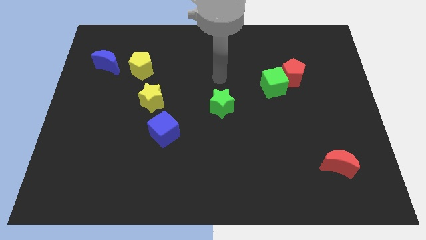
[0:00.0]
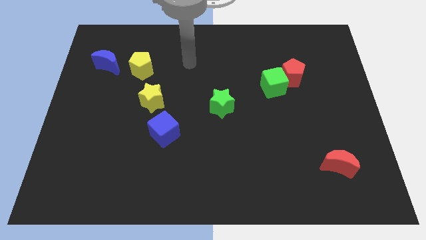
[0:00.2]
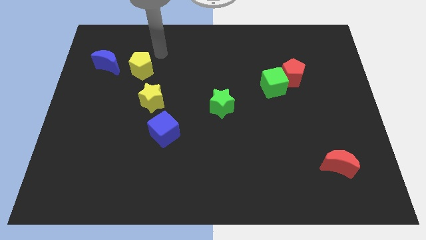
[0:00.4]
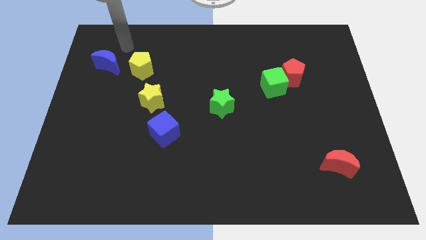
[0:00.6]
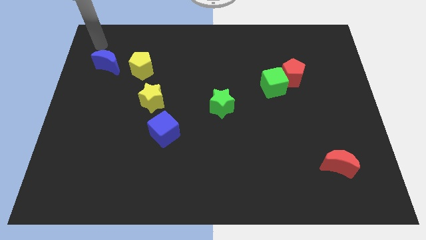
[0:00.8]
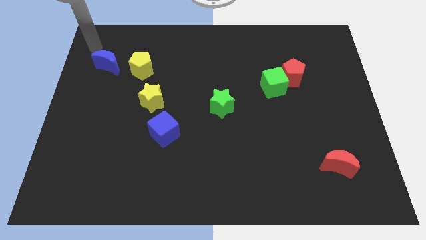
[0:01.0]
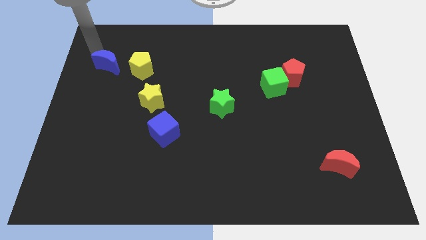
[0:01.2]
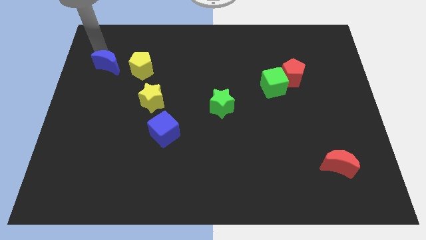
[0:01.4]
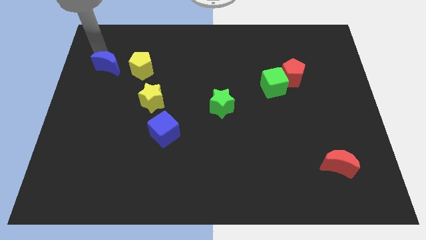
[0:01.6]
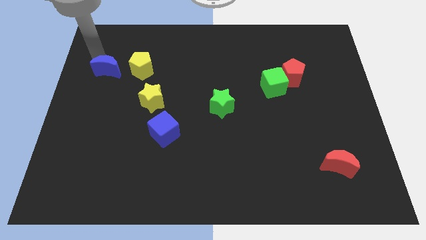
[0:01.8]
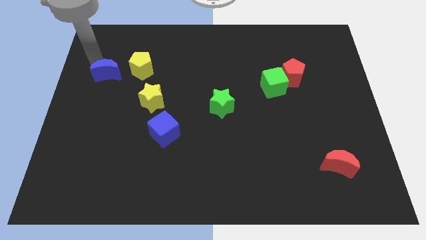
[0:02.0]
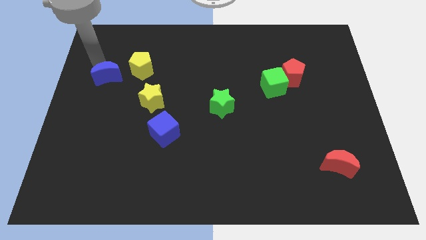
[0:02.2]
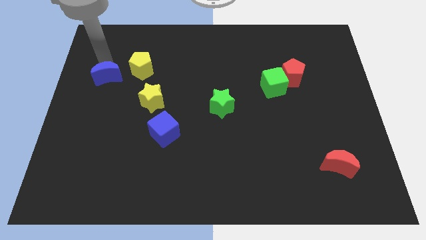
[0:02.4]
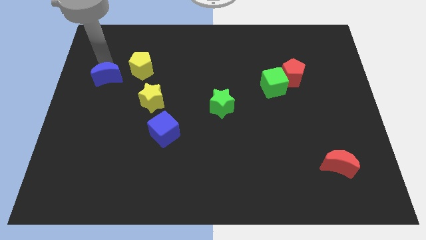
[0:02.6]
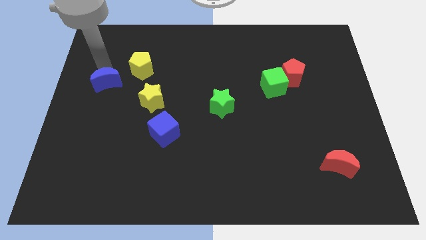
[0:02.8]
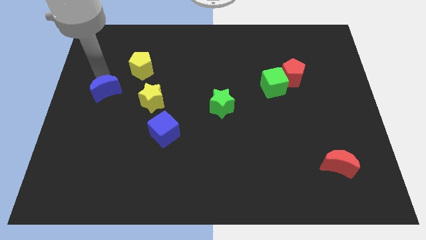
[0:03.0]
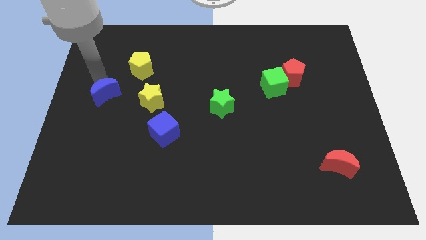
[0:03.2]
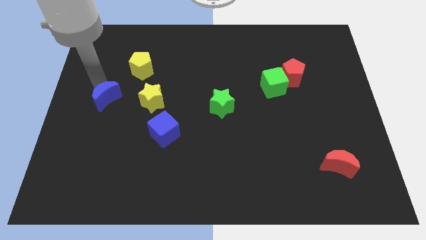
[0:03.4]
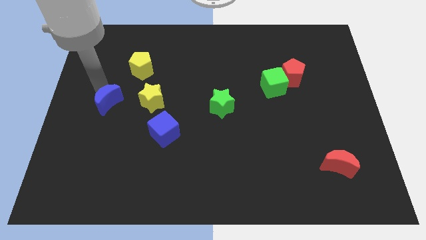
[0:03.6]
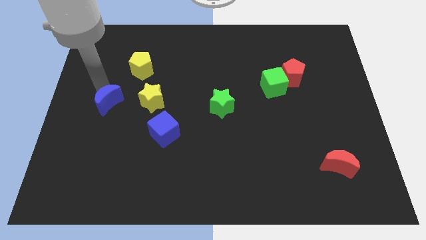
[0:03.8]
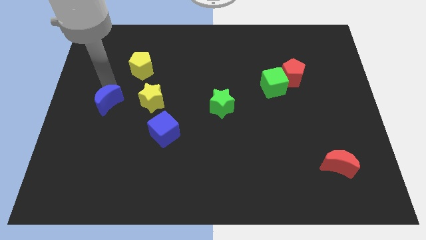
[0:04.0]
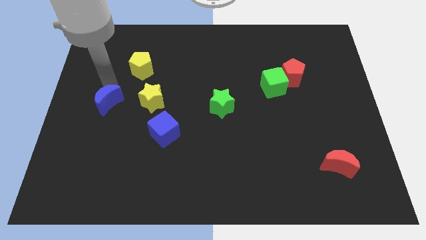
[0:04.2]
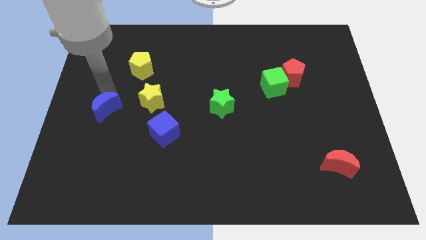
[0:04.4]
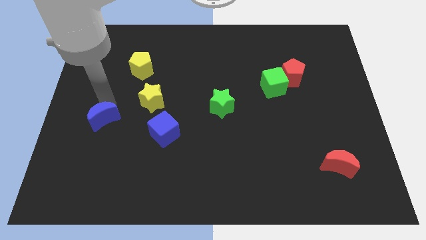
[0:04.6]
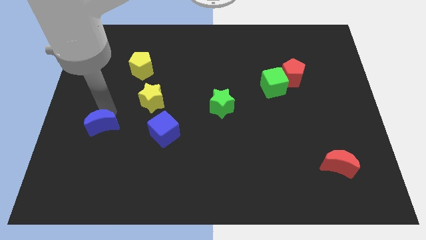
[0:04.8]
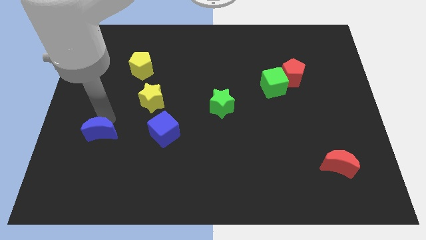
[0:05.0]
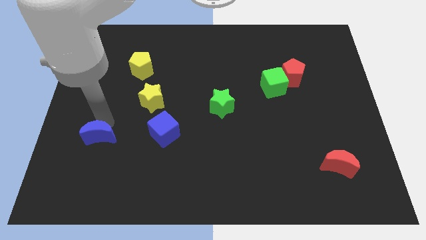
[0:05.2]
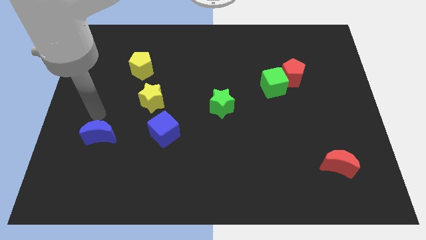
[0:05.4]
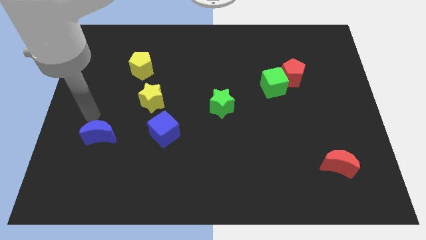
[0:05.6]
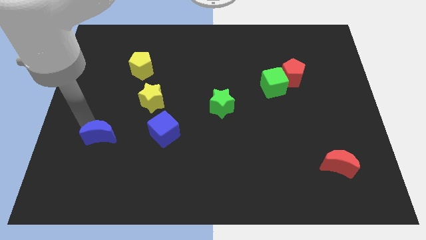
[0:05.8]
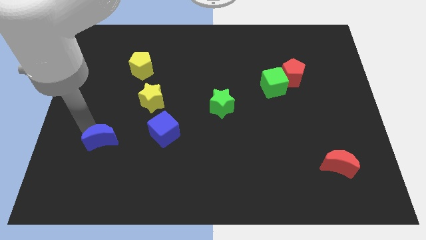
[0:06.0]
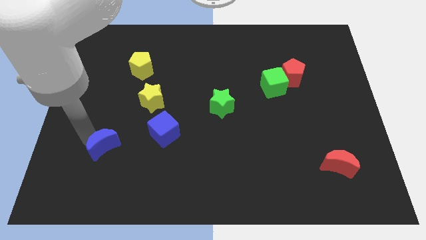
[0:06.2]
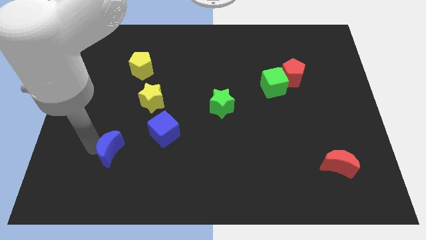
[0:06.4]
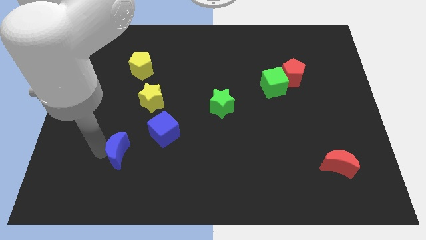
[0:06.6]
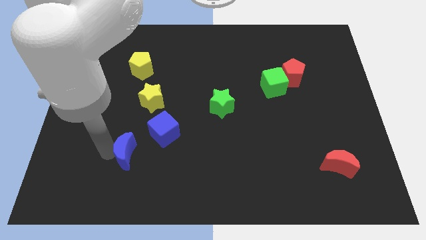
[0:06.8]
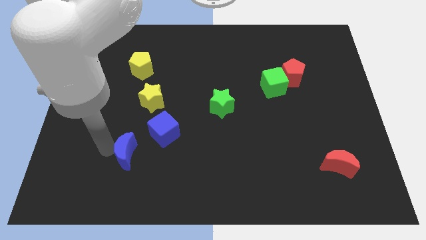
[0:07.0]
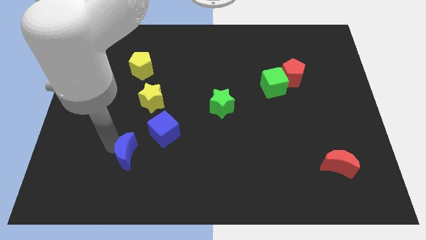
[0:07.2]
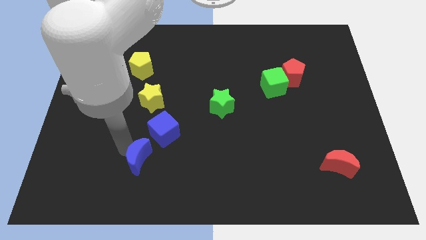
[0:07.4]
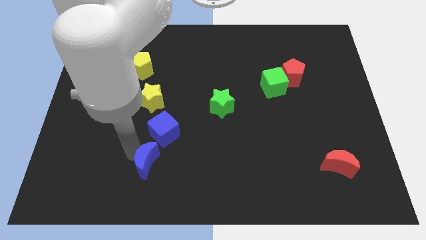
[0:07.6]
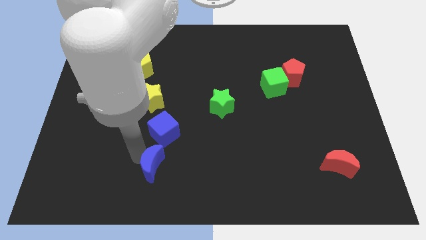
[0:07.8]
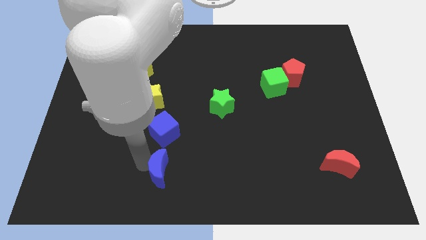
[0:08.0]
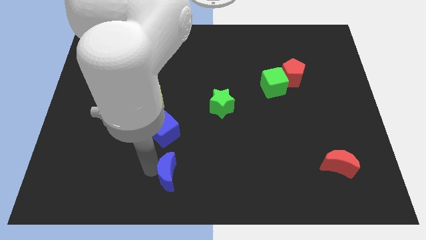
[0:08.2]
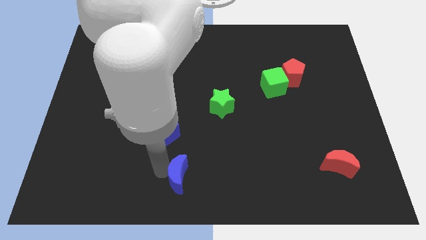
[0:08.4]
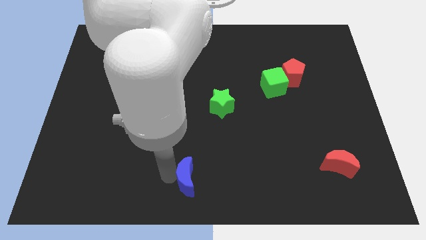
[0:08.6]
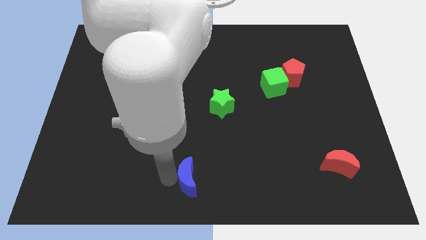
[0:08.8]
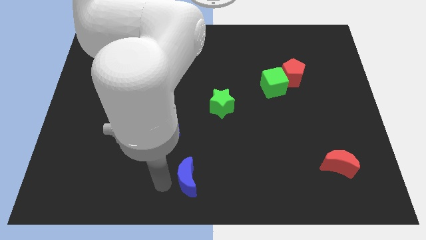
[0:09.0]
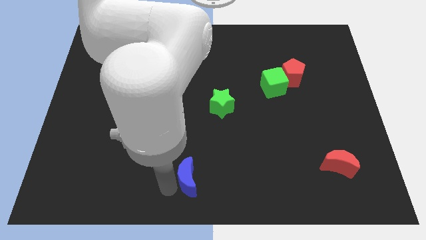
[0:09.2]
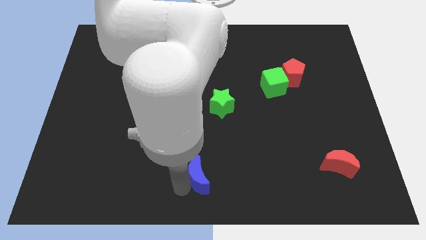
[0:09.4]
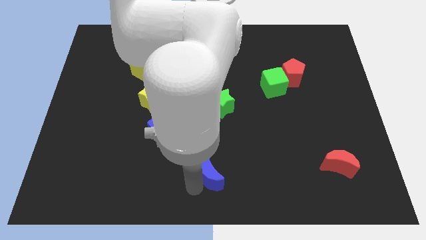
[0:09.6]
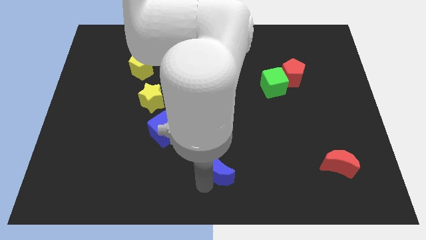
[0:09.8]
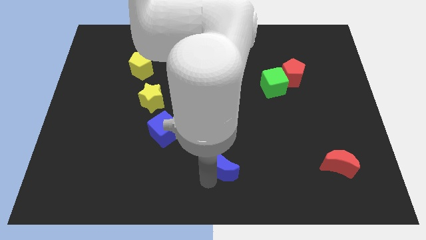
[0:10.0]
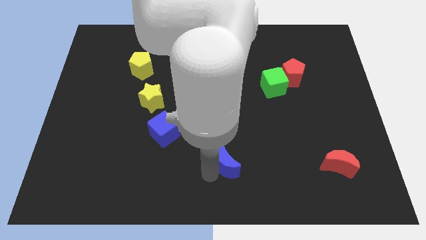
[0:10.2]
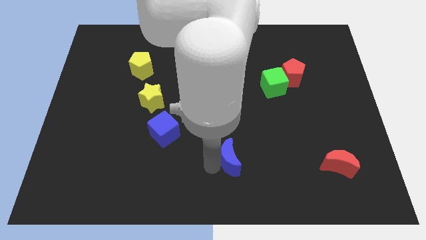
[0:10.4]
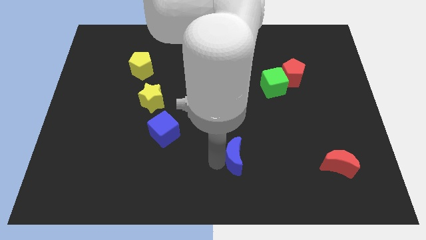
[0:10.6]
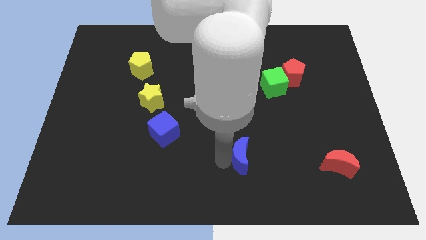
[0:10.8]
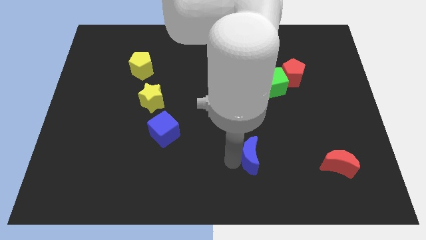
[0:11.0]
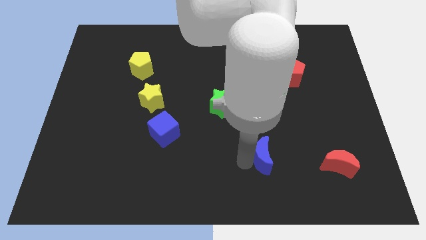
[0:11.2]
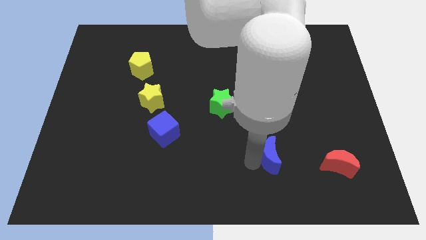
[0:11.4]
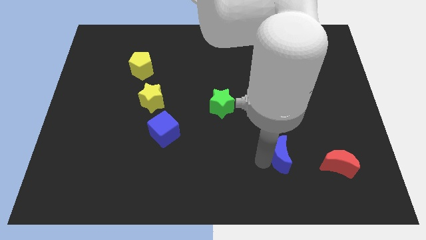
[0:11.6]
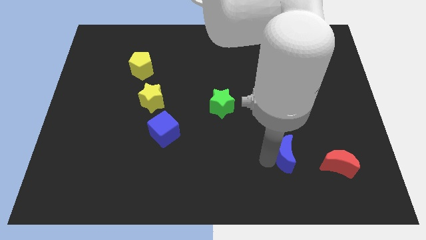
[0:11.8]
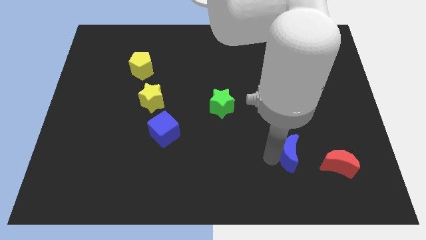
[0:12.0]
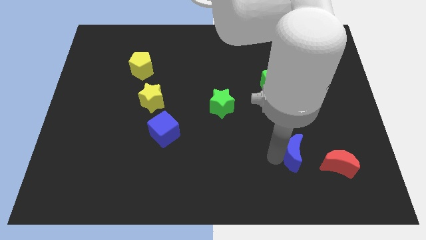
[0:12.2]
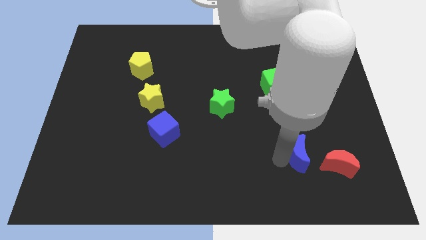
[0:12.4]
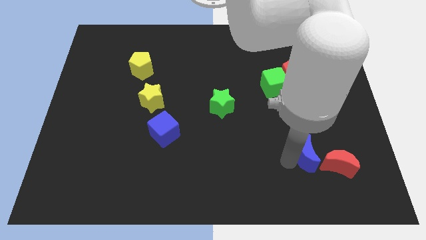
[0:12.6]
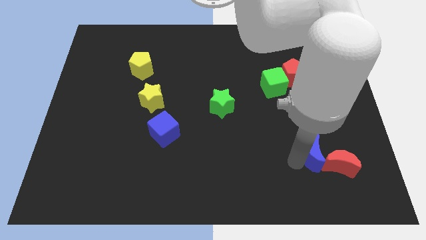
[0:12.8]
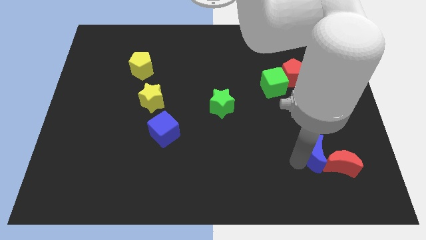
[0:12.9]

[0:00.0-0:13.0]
push the blue moon to the red moon

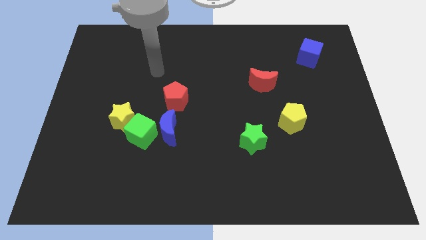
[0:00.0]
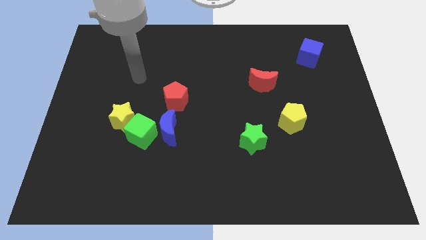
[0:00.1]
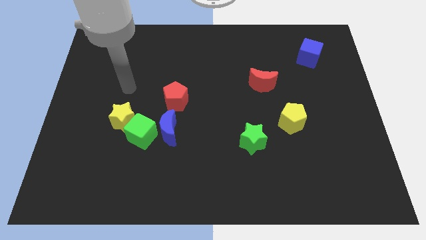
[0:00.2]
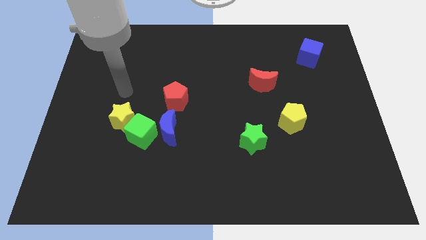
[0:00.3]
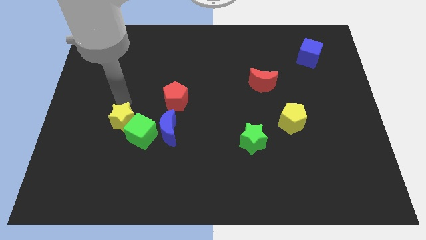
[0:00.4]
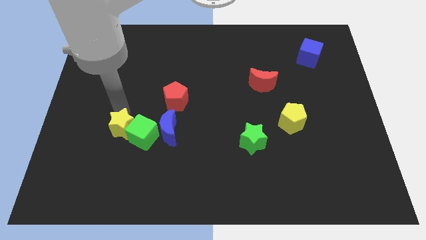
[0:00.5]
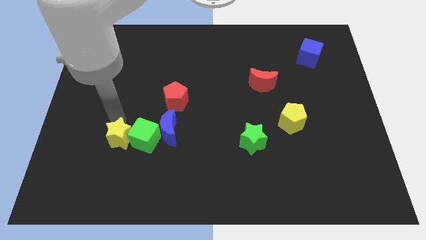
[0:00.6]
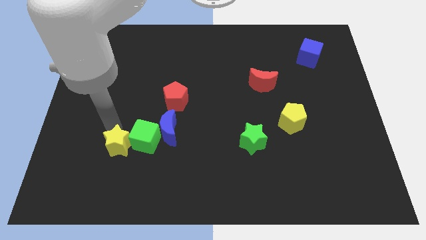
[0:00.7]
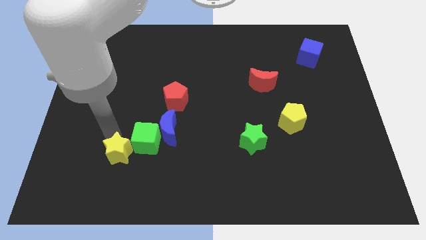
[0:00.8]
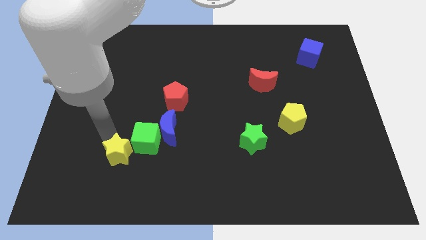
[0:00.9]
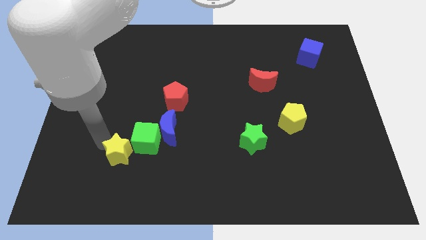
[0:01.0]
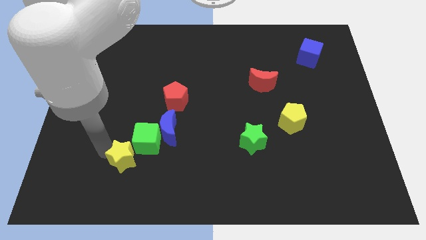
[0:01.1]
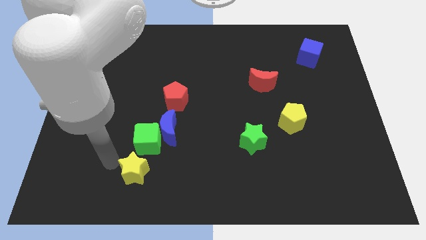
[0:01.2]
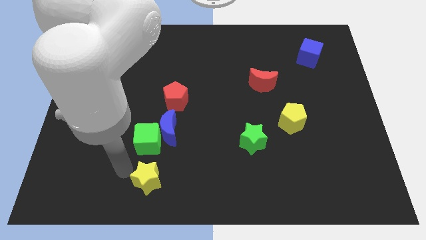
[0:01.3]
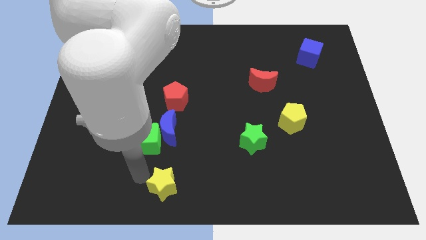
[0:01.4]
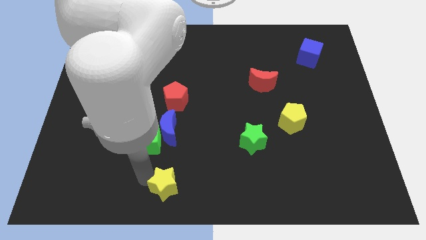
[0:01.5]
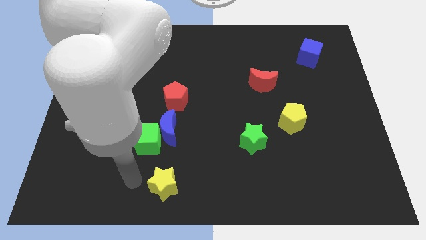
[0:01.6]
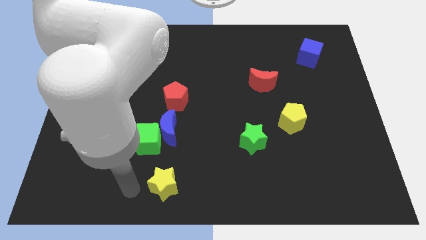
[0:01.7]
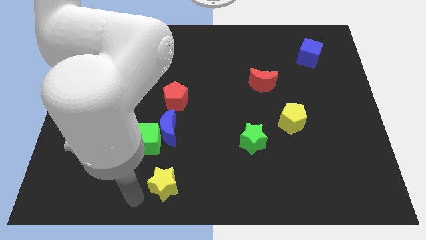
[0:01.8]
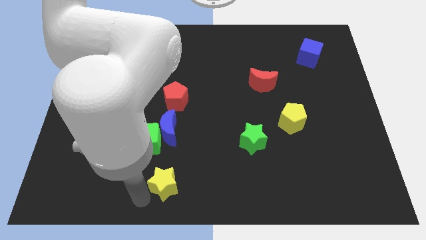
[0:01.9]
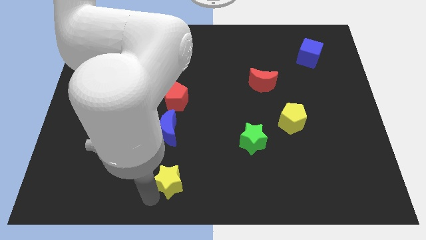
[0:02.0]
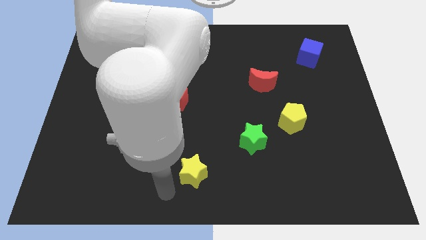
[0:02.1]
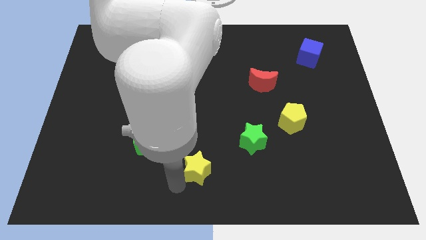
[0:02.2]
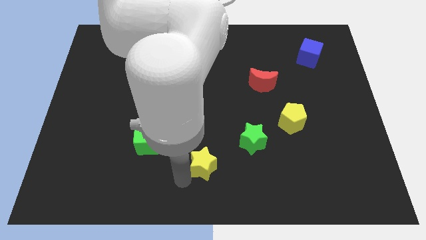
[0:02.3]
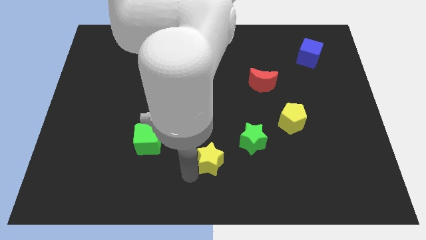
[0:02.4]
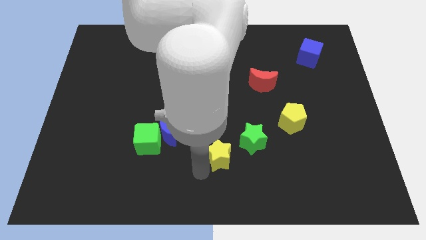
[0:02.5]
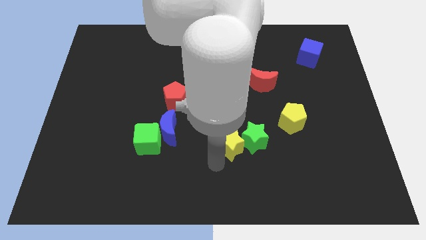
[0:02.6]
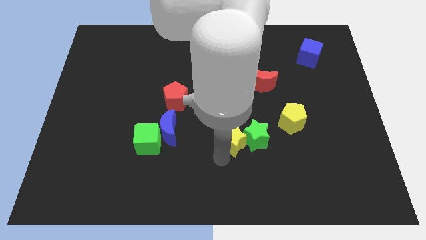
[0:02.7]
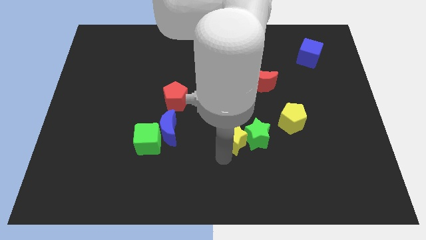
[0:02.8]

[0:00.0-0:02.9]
move the yellow star next to the green star
